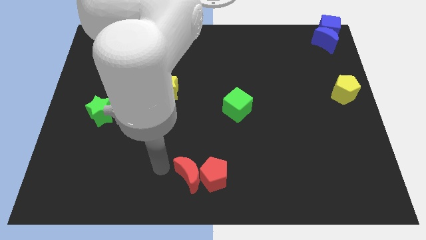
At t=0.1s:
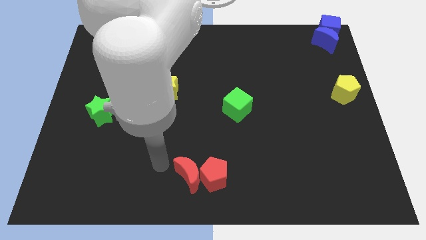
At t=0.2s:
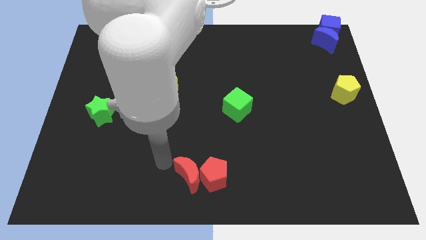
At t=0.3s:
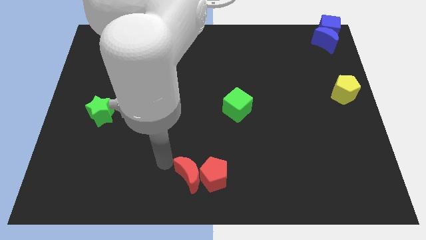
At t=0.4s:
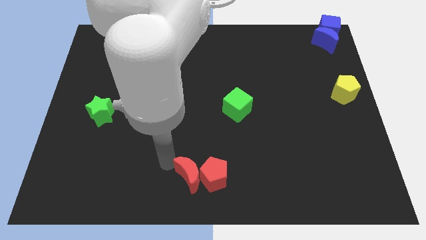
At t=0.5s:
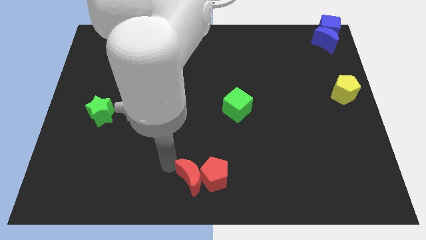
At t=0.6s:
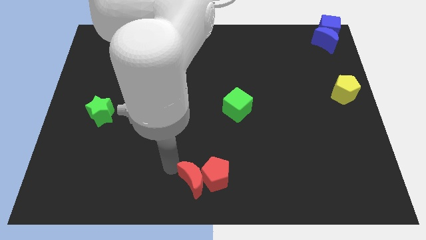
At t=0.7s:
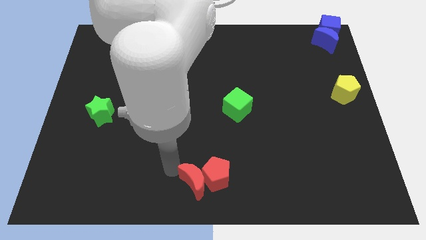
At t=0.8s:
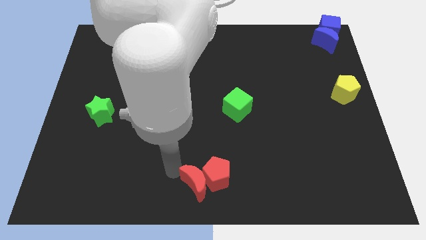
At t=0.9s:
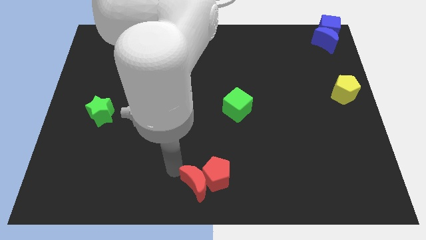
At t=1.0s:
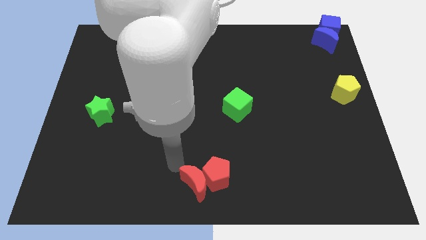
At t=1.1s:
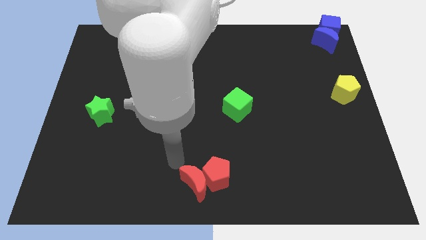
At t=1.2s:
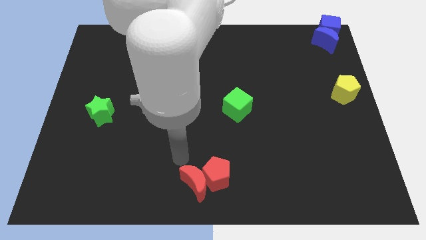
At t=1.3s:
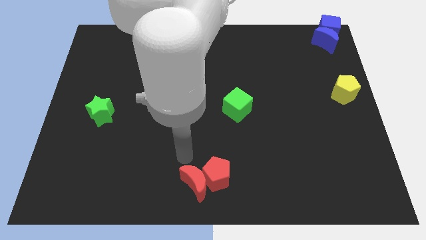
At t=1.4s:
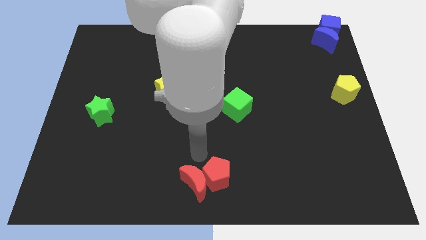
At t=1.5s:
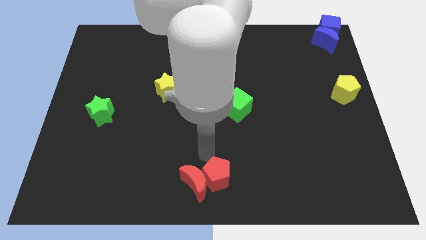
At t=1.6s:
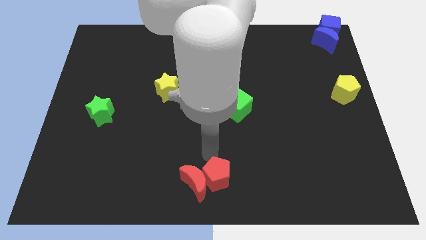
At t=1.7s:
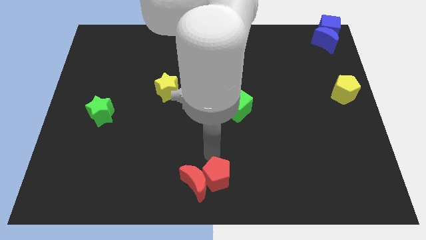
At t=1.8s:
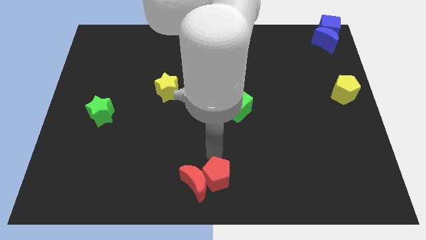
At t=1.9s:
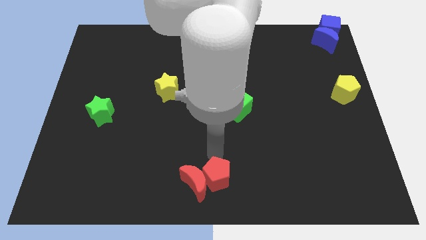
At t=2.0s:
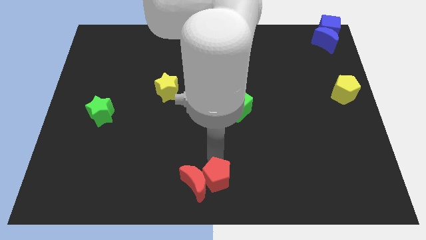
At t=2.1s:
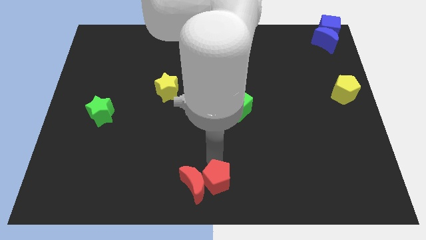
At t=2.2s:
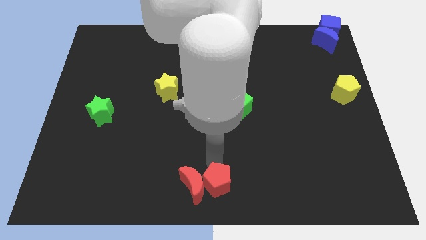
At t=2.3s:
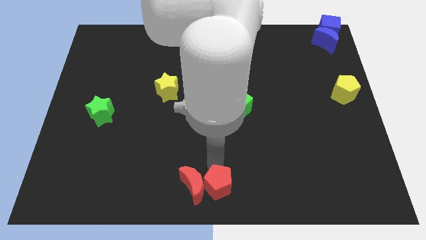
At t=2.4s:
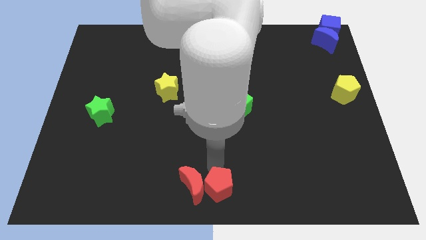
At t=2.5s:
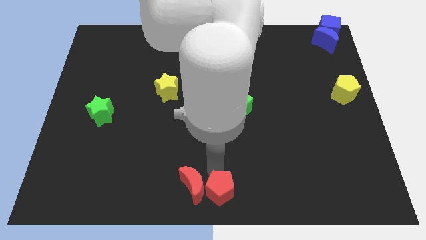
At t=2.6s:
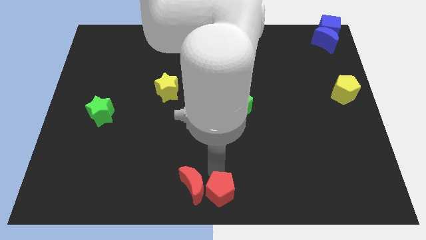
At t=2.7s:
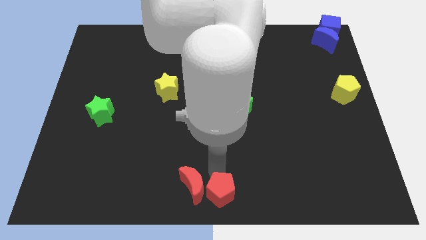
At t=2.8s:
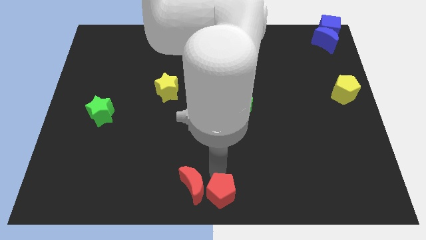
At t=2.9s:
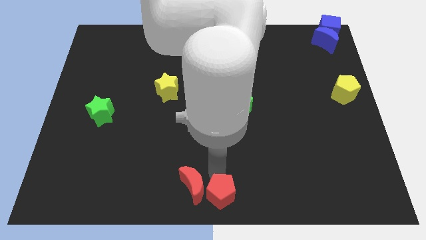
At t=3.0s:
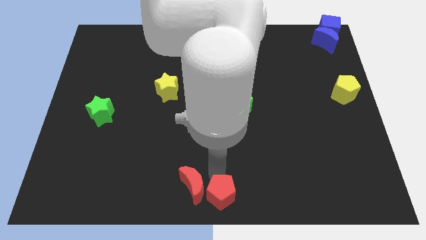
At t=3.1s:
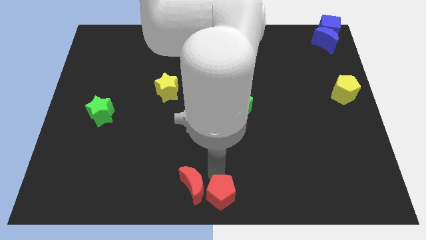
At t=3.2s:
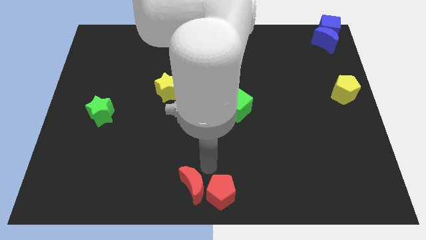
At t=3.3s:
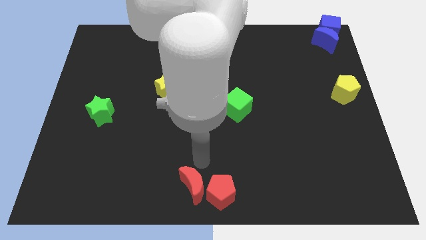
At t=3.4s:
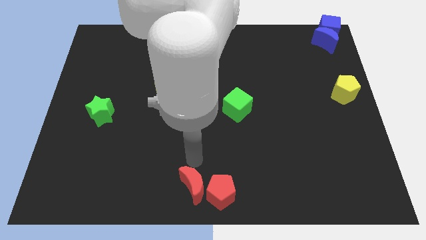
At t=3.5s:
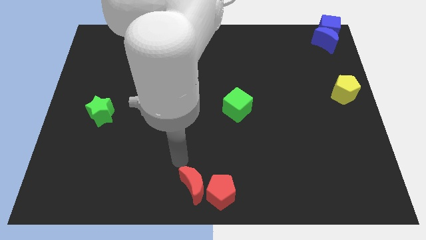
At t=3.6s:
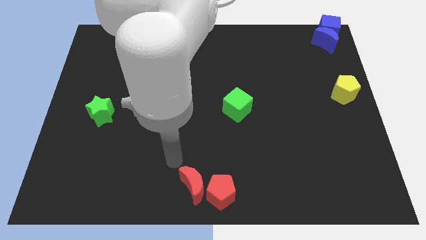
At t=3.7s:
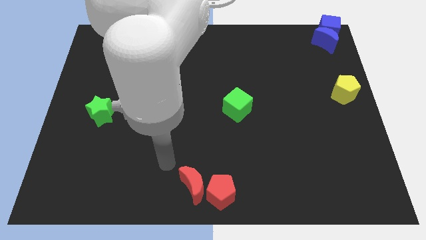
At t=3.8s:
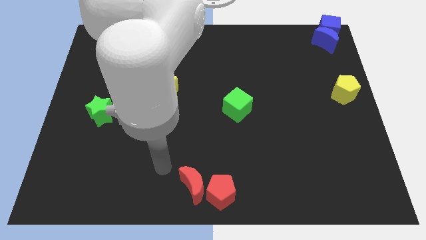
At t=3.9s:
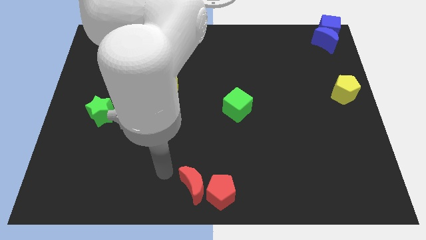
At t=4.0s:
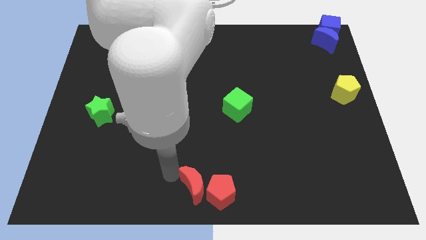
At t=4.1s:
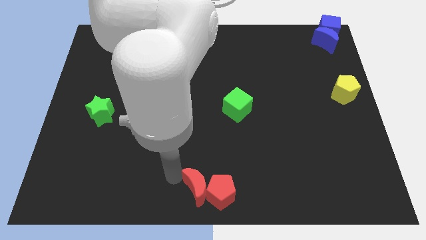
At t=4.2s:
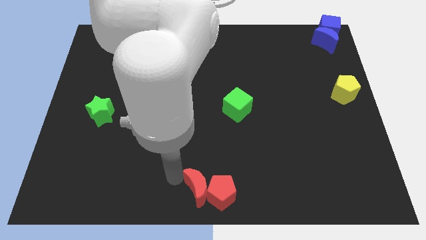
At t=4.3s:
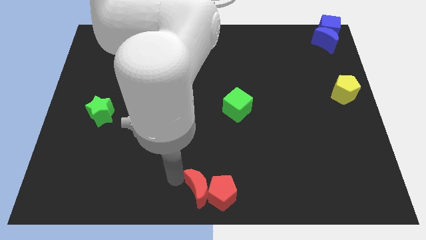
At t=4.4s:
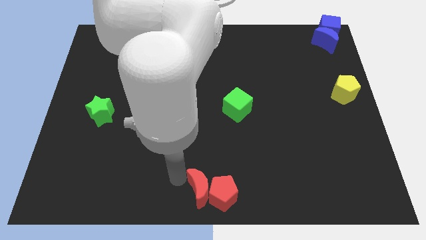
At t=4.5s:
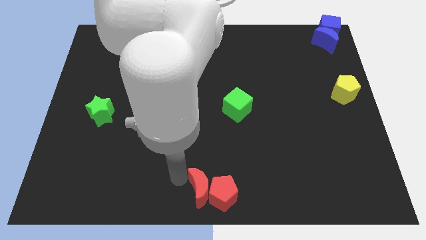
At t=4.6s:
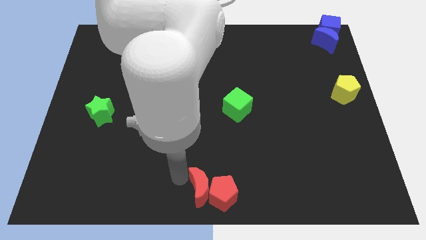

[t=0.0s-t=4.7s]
place the red blocks at the bottom center of the board

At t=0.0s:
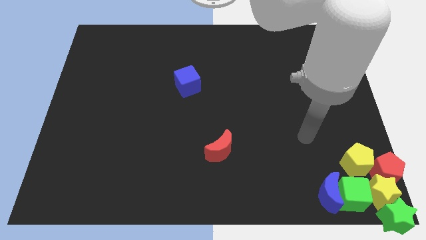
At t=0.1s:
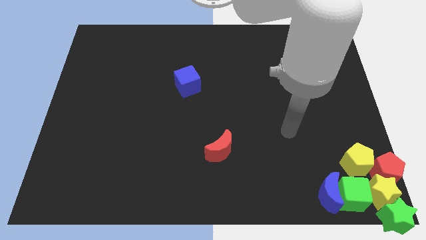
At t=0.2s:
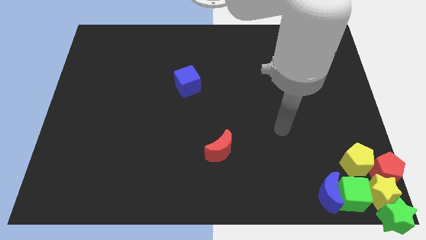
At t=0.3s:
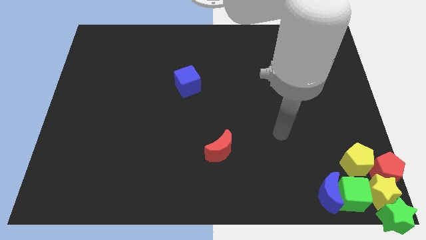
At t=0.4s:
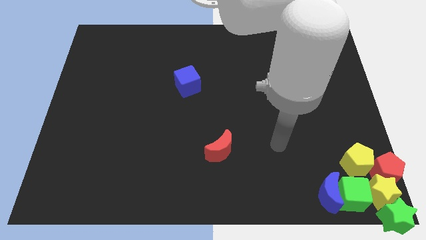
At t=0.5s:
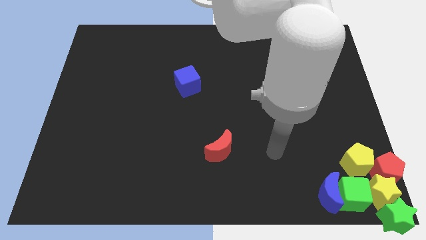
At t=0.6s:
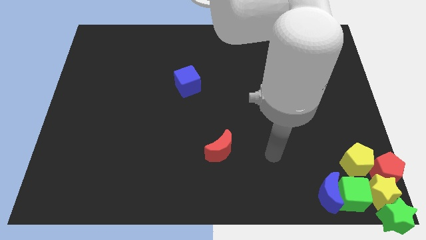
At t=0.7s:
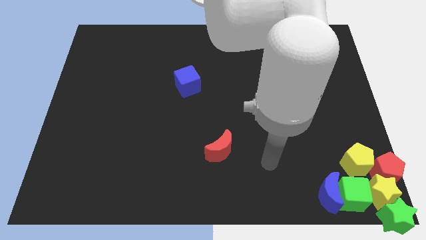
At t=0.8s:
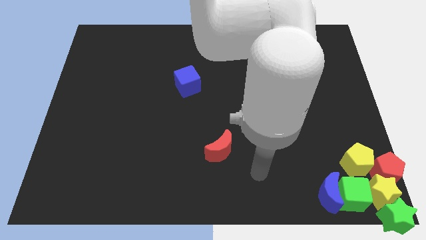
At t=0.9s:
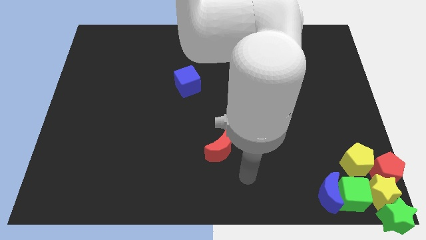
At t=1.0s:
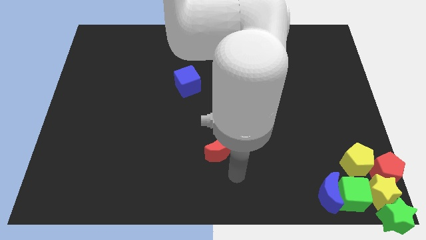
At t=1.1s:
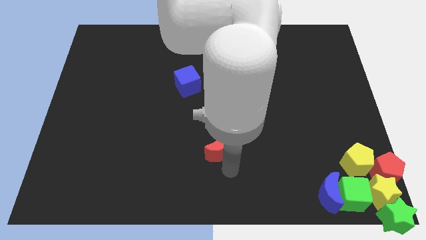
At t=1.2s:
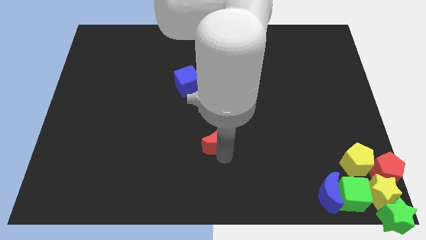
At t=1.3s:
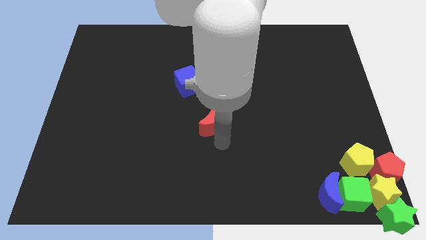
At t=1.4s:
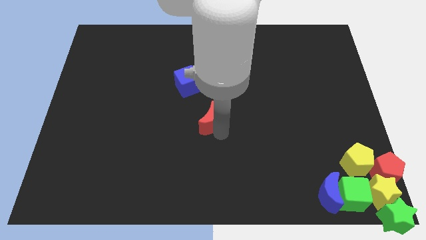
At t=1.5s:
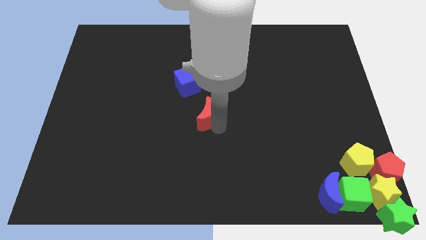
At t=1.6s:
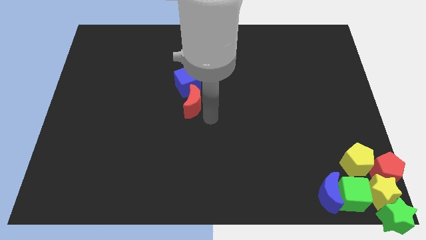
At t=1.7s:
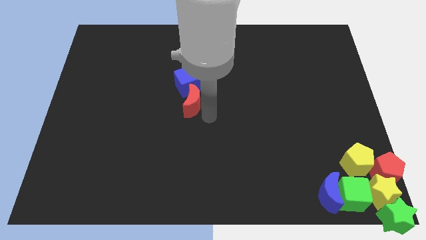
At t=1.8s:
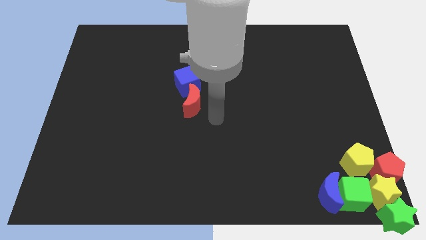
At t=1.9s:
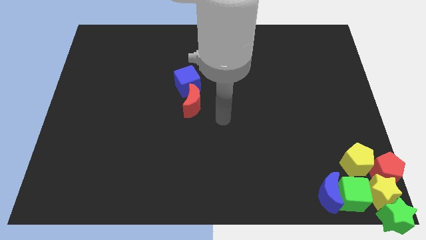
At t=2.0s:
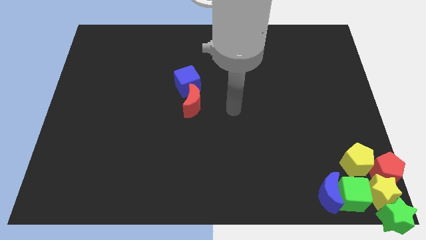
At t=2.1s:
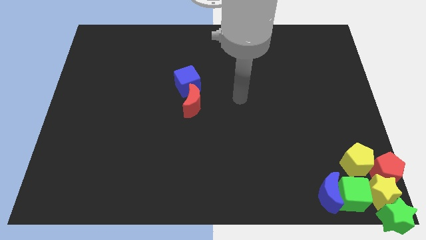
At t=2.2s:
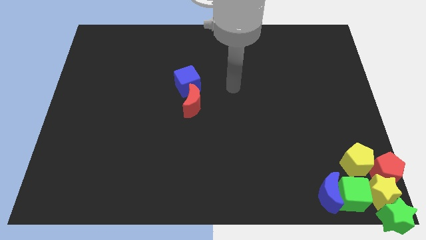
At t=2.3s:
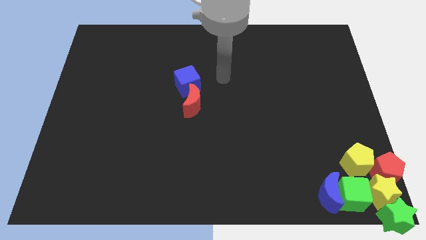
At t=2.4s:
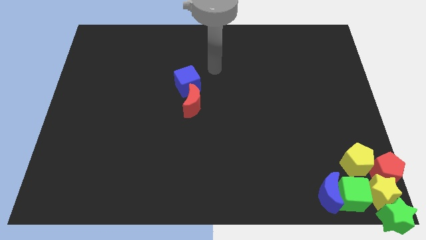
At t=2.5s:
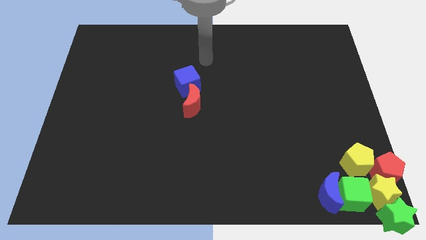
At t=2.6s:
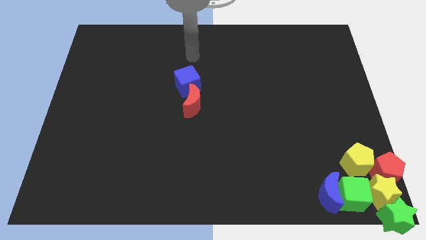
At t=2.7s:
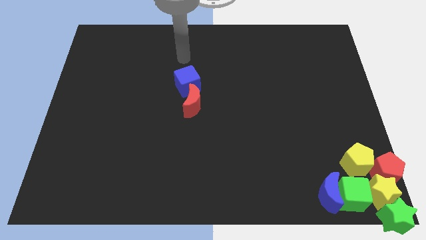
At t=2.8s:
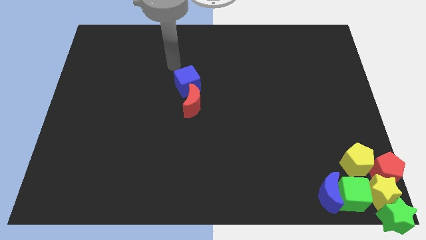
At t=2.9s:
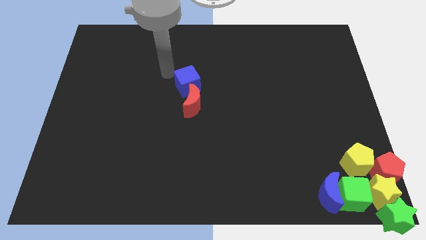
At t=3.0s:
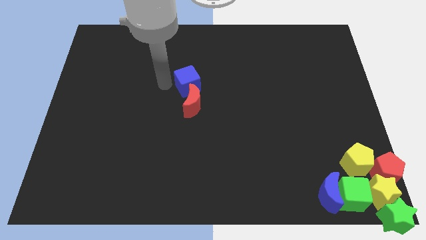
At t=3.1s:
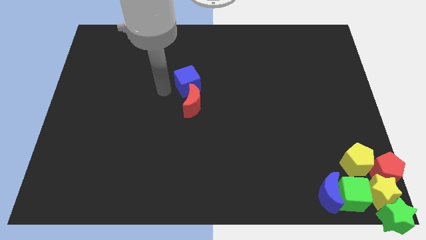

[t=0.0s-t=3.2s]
place the red crescent below the blue cube

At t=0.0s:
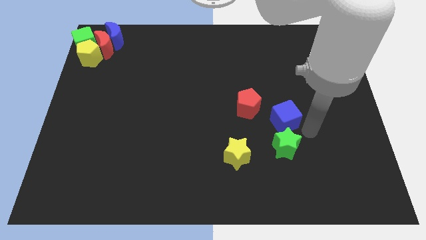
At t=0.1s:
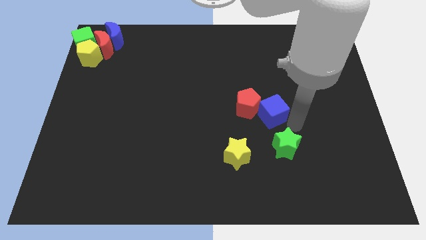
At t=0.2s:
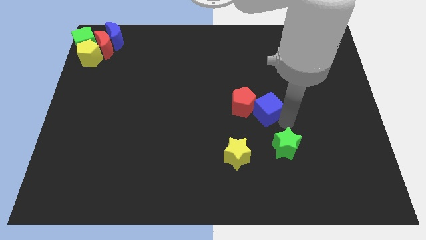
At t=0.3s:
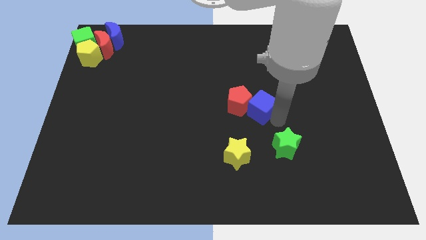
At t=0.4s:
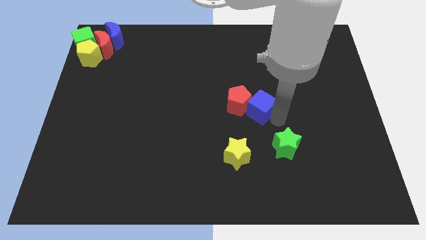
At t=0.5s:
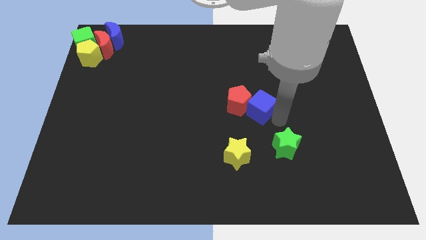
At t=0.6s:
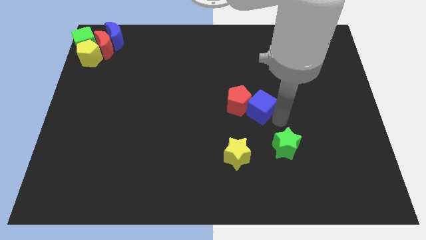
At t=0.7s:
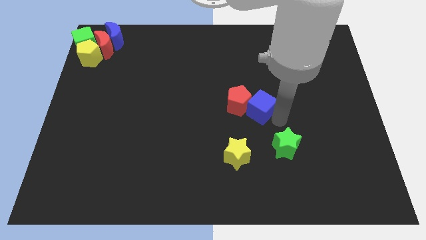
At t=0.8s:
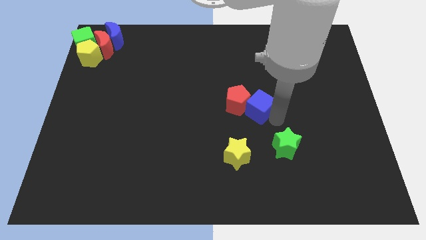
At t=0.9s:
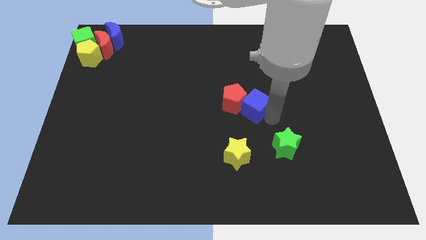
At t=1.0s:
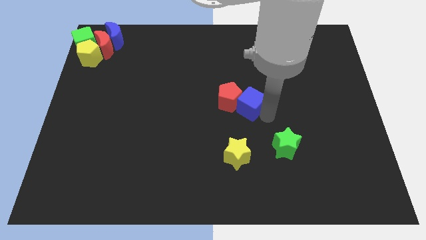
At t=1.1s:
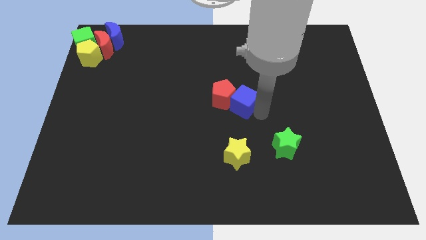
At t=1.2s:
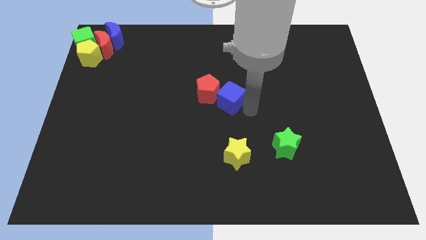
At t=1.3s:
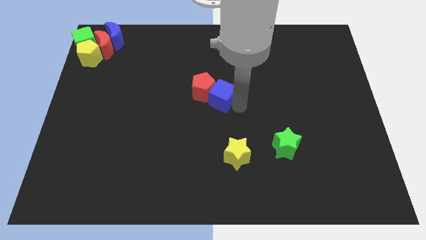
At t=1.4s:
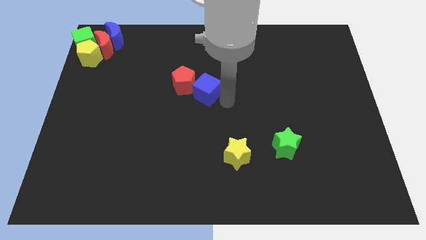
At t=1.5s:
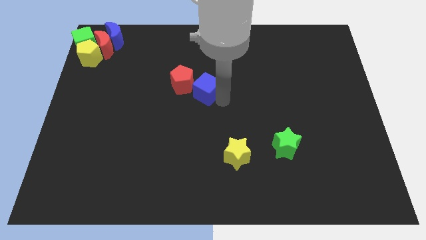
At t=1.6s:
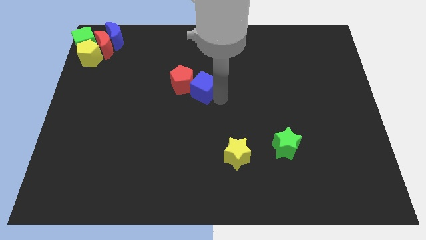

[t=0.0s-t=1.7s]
drag the blue cube along with red pentagon towards the group of blocks
